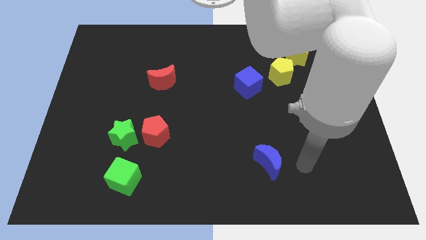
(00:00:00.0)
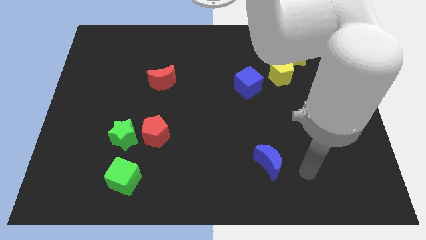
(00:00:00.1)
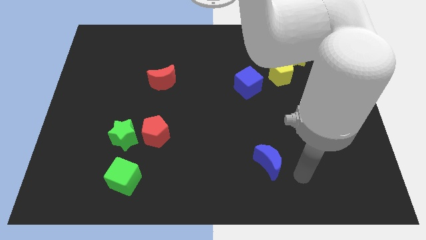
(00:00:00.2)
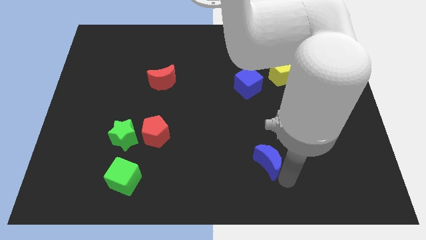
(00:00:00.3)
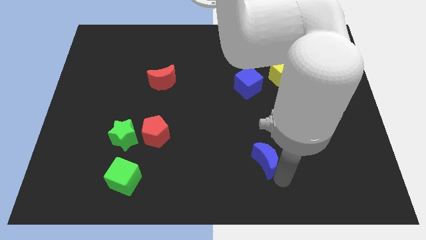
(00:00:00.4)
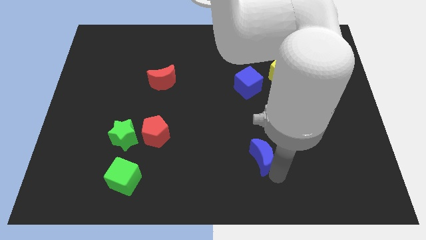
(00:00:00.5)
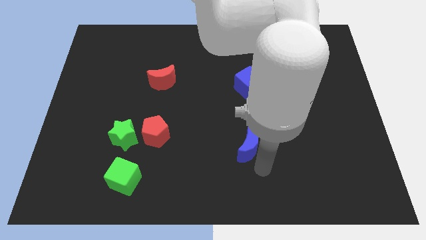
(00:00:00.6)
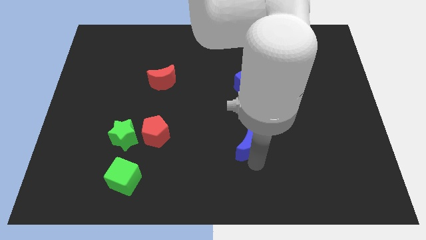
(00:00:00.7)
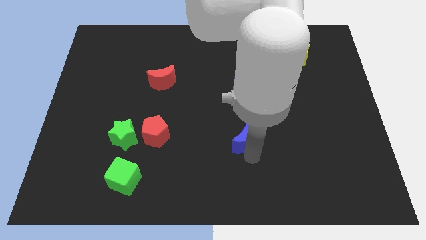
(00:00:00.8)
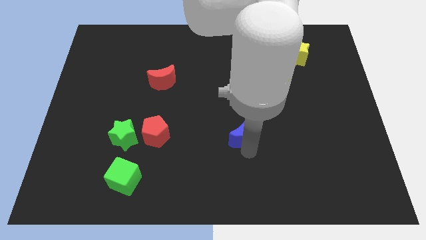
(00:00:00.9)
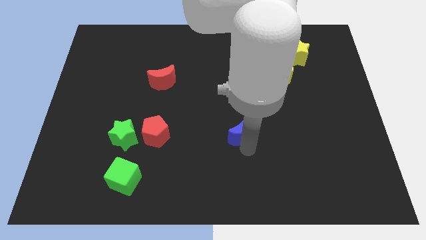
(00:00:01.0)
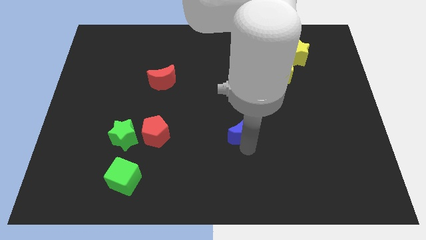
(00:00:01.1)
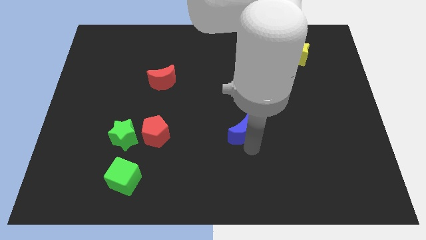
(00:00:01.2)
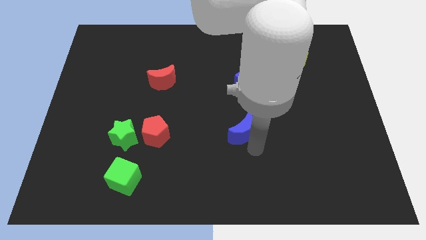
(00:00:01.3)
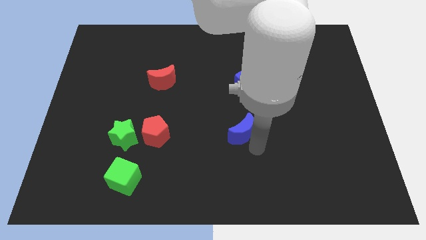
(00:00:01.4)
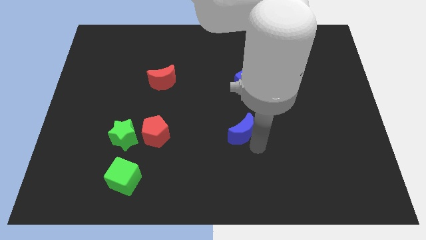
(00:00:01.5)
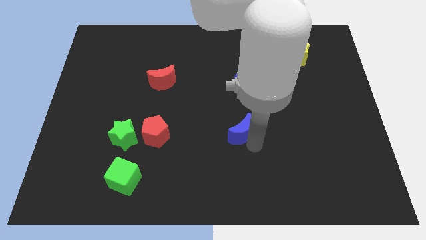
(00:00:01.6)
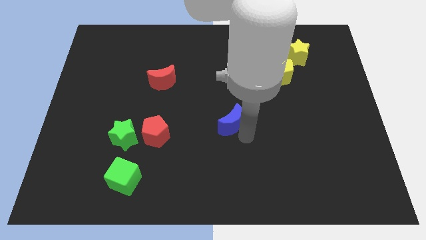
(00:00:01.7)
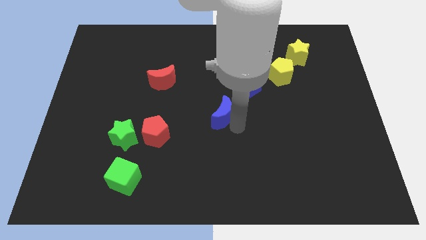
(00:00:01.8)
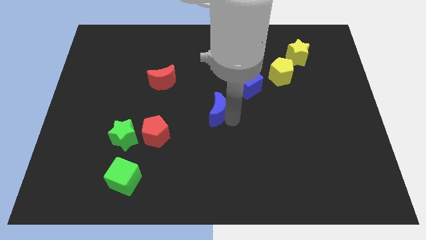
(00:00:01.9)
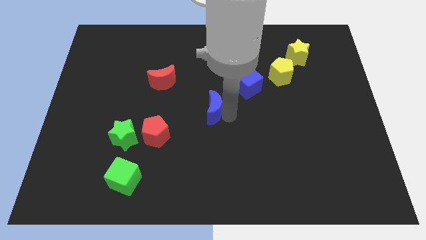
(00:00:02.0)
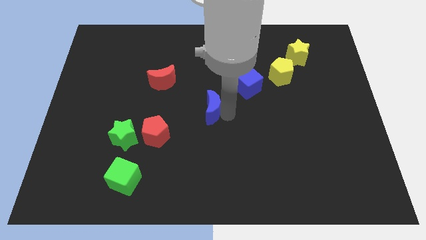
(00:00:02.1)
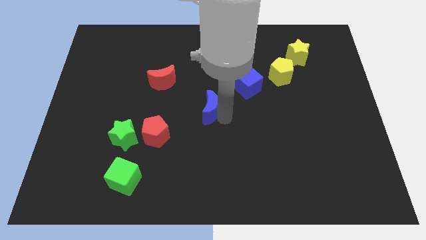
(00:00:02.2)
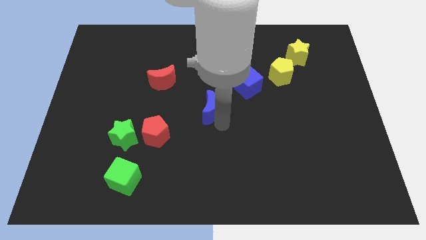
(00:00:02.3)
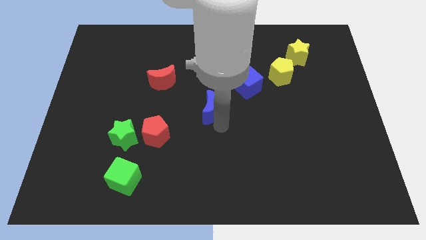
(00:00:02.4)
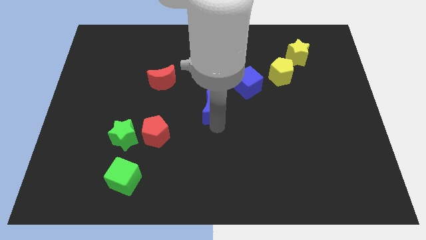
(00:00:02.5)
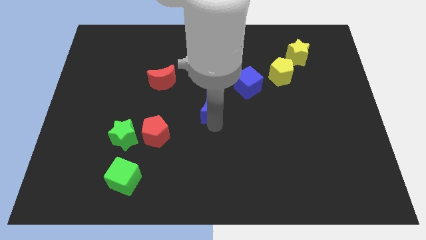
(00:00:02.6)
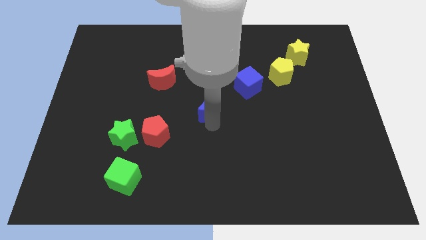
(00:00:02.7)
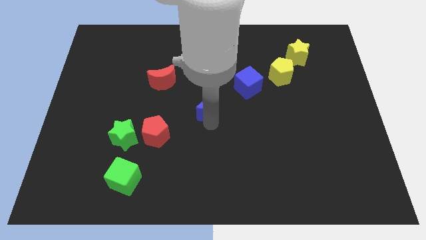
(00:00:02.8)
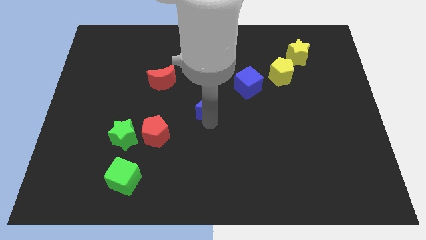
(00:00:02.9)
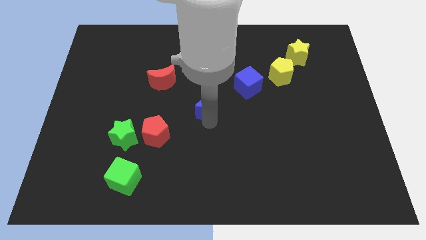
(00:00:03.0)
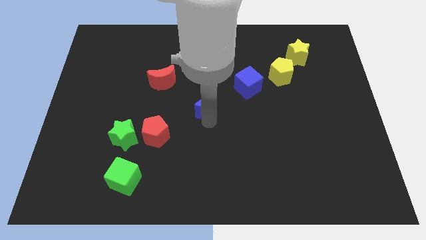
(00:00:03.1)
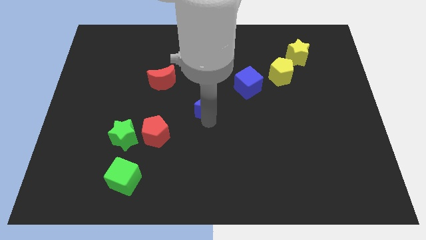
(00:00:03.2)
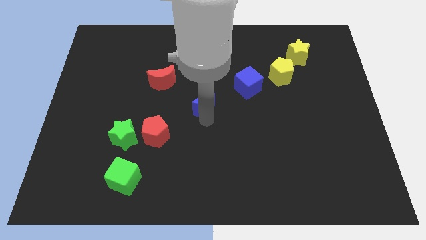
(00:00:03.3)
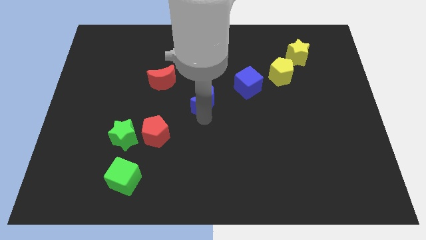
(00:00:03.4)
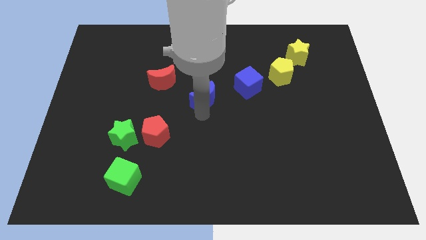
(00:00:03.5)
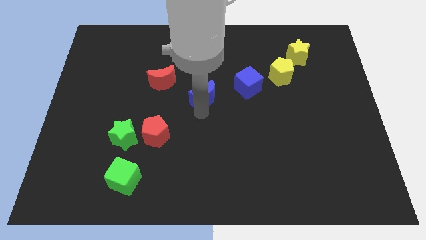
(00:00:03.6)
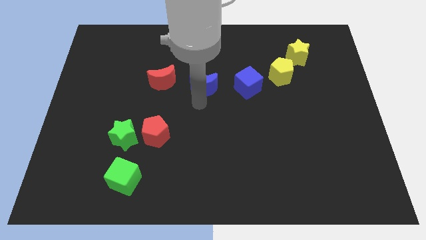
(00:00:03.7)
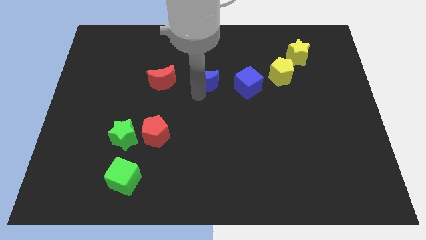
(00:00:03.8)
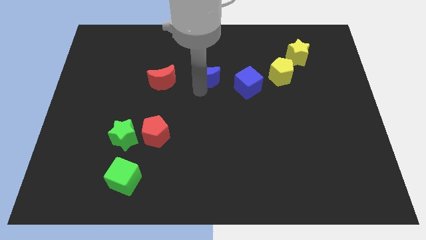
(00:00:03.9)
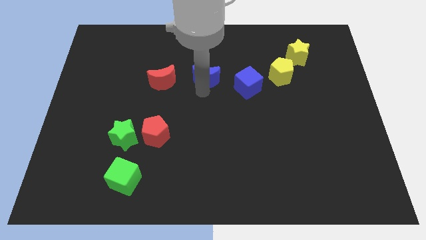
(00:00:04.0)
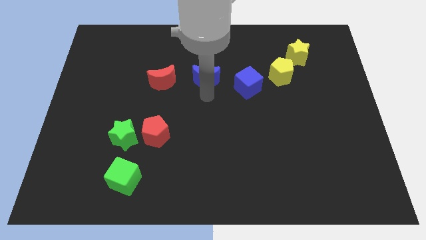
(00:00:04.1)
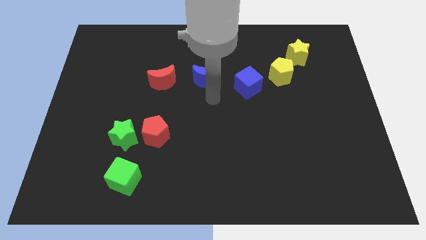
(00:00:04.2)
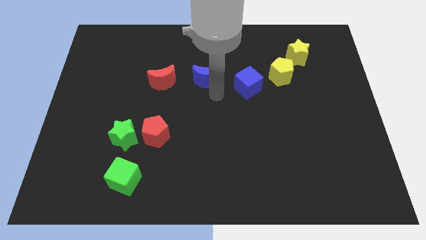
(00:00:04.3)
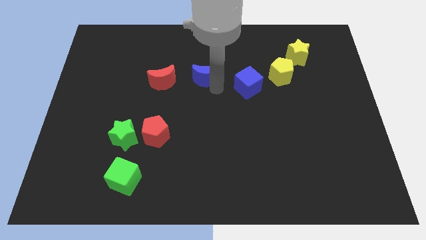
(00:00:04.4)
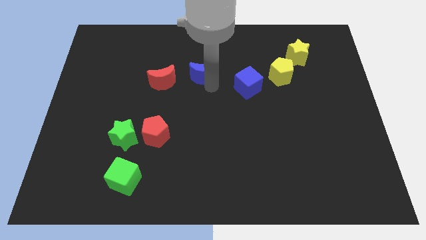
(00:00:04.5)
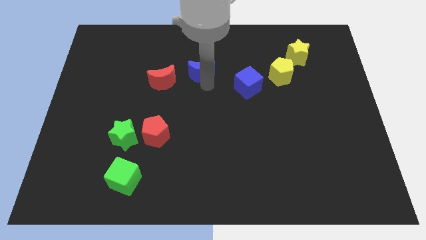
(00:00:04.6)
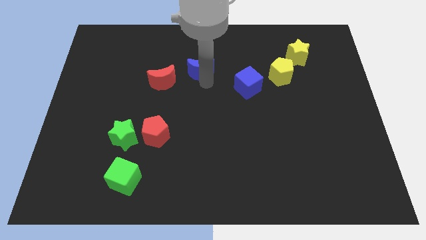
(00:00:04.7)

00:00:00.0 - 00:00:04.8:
place the blue moon right to the red moon

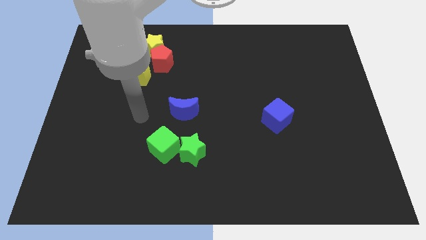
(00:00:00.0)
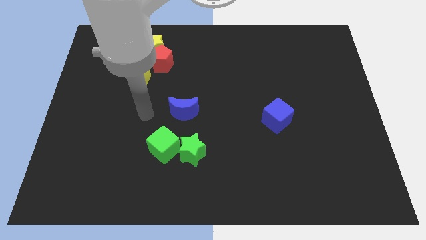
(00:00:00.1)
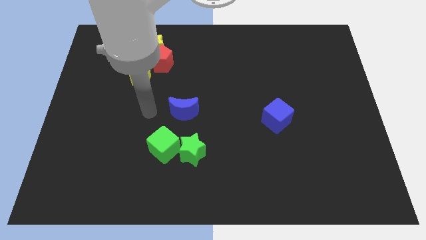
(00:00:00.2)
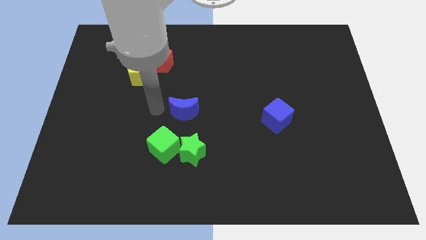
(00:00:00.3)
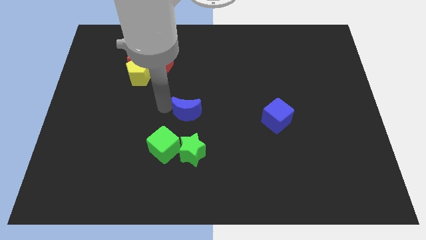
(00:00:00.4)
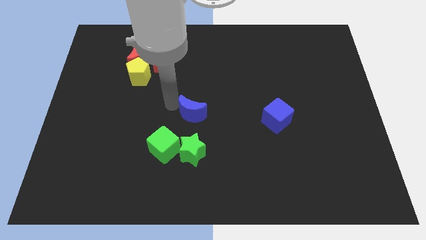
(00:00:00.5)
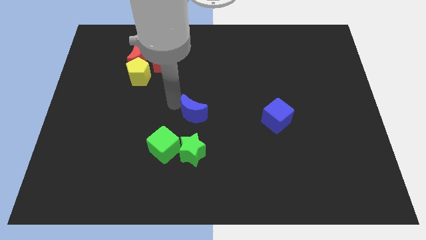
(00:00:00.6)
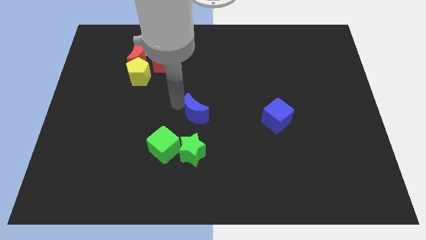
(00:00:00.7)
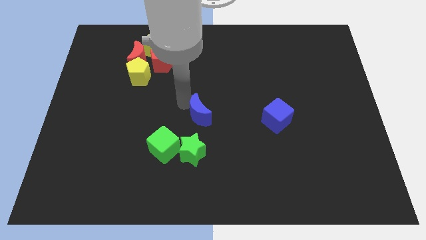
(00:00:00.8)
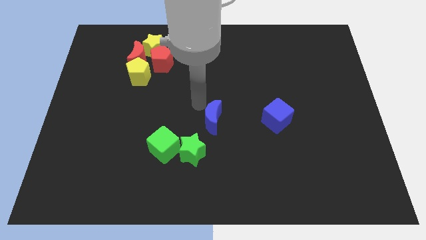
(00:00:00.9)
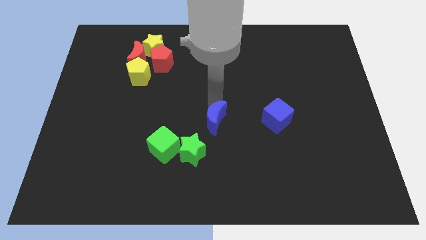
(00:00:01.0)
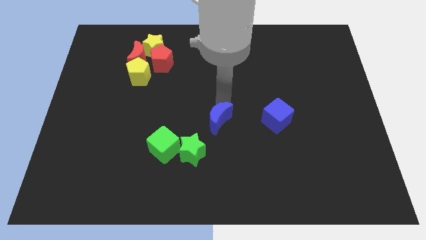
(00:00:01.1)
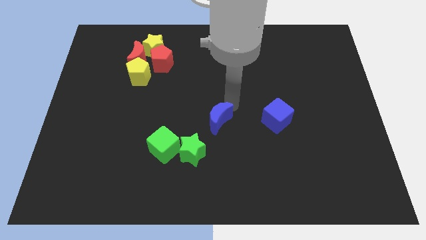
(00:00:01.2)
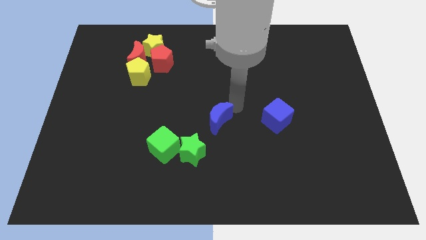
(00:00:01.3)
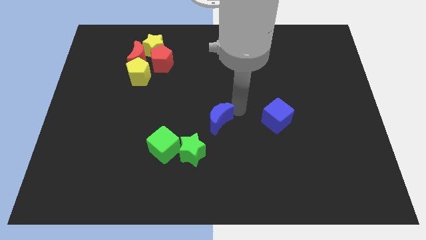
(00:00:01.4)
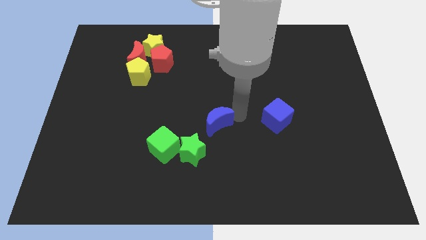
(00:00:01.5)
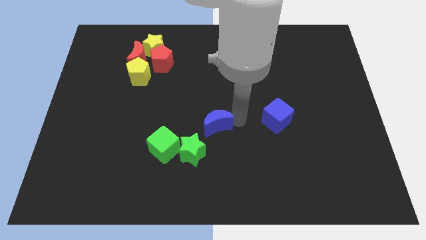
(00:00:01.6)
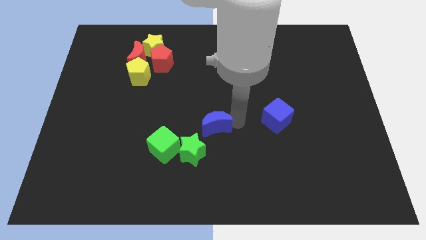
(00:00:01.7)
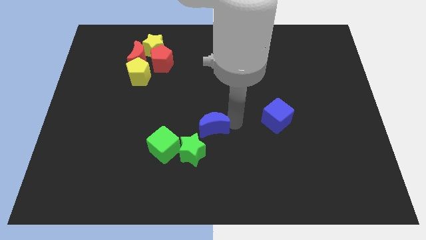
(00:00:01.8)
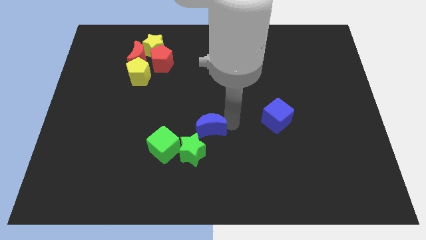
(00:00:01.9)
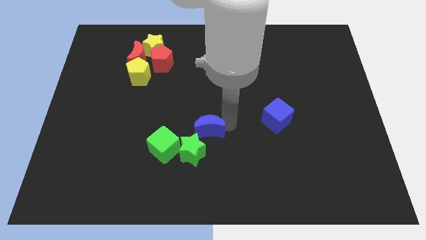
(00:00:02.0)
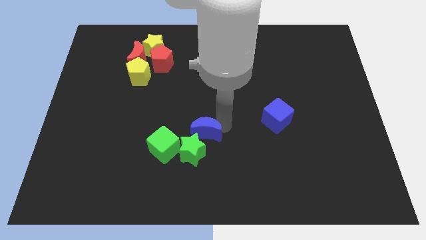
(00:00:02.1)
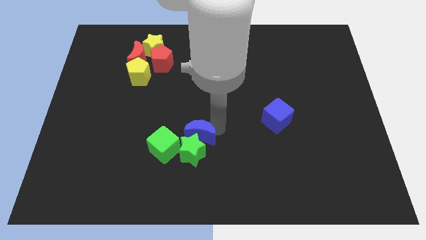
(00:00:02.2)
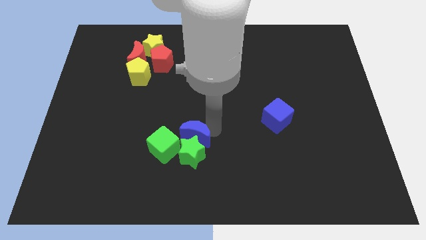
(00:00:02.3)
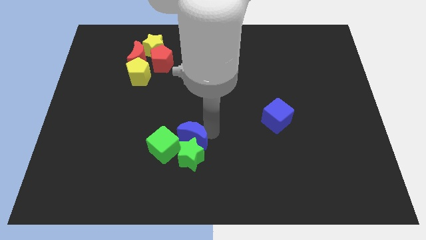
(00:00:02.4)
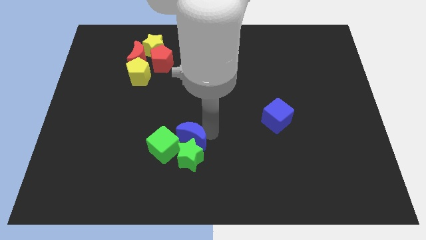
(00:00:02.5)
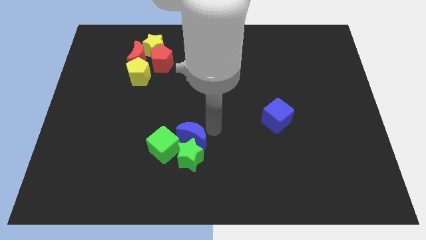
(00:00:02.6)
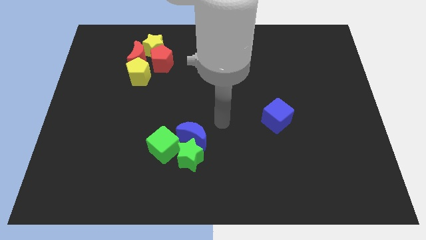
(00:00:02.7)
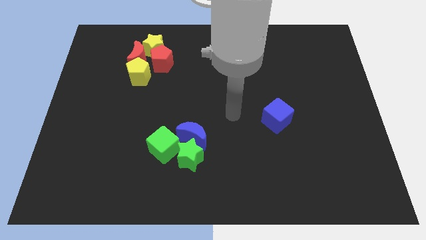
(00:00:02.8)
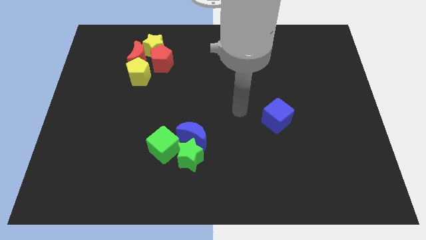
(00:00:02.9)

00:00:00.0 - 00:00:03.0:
push blue moon towards green star and green cube

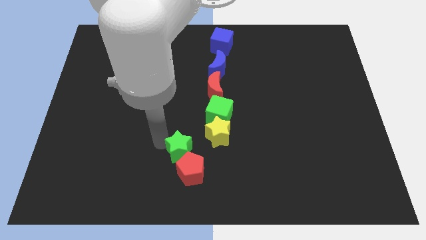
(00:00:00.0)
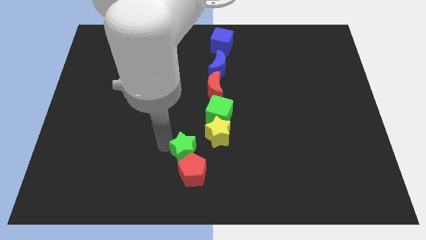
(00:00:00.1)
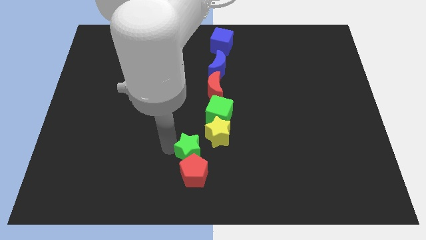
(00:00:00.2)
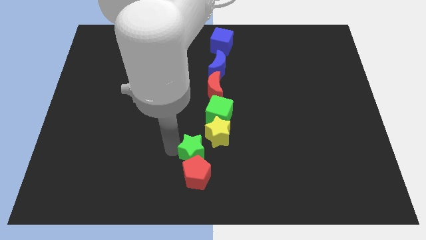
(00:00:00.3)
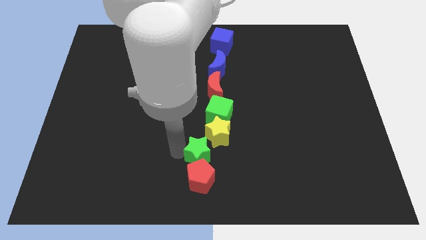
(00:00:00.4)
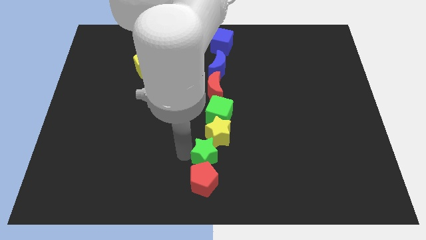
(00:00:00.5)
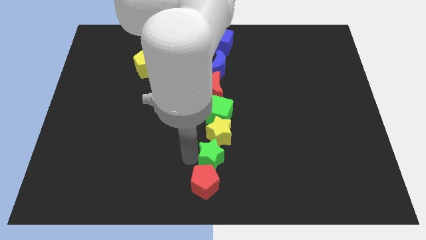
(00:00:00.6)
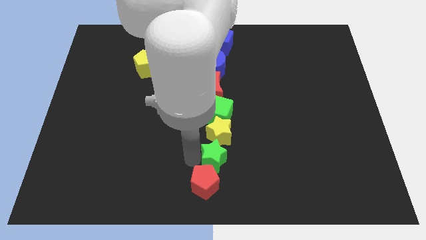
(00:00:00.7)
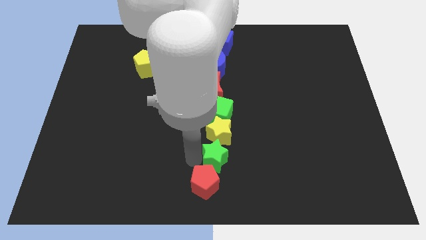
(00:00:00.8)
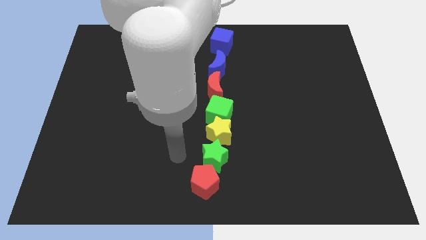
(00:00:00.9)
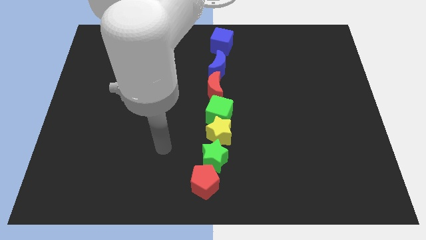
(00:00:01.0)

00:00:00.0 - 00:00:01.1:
place green star below yellow star
